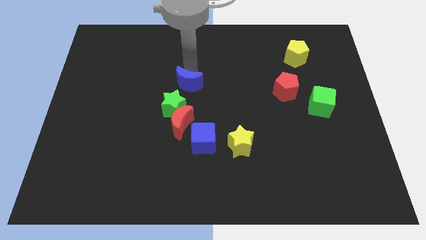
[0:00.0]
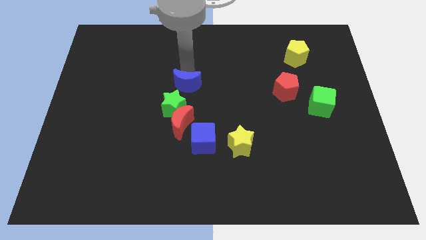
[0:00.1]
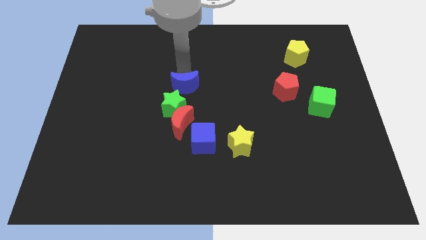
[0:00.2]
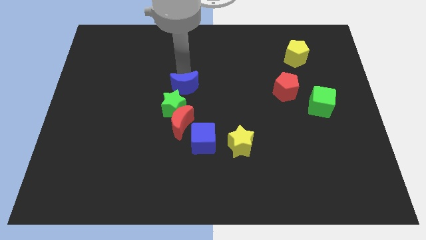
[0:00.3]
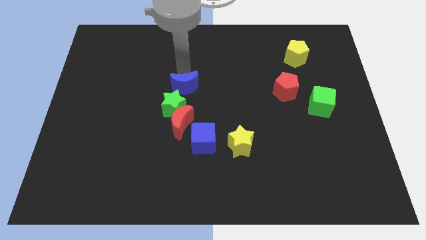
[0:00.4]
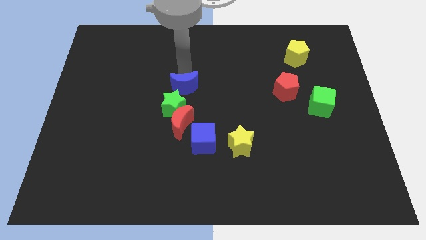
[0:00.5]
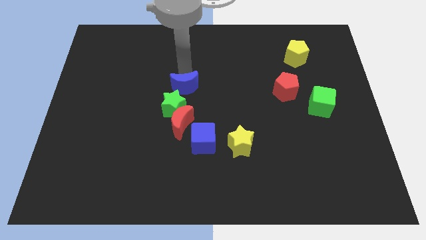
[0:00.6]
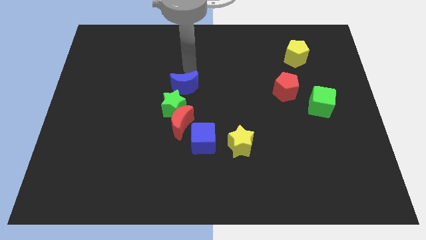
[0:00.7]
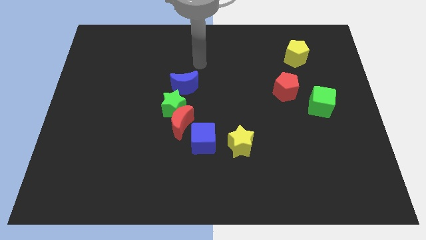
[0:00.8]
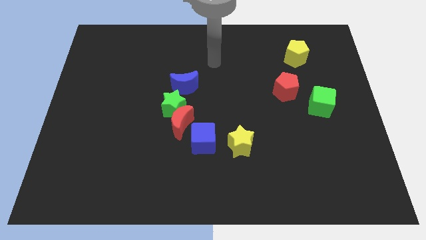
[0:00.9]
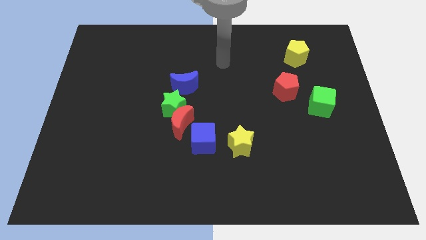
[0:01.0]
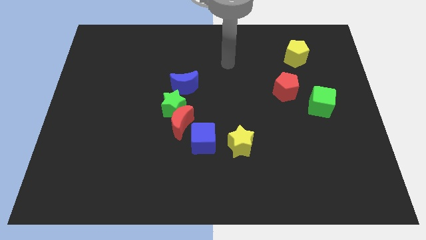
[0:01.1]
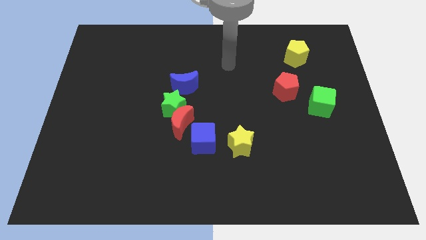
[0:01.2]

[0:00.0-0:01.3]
push blue crescent to the top of green star

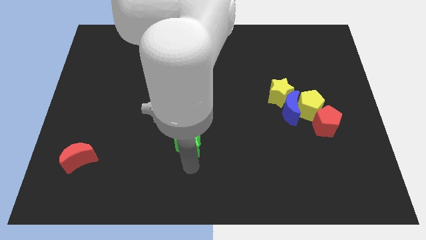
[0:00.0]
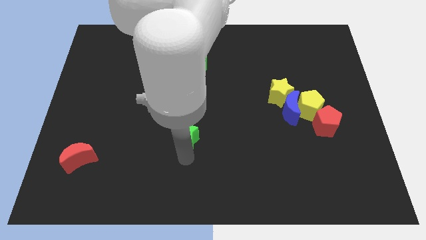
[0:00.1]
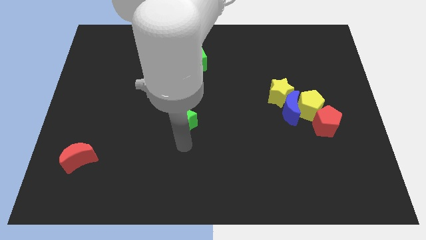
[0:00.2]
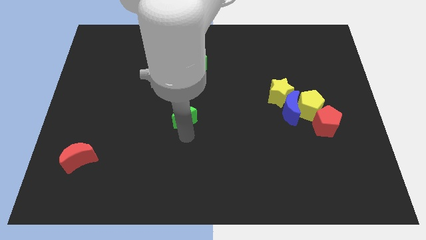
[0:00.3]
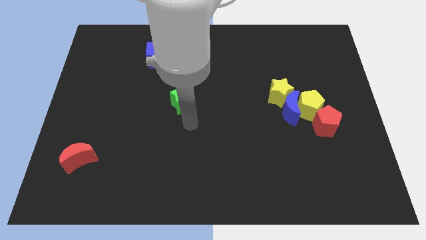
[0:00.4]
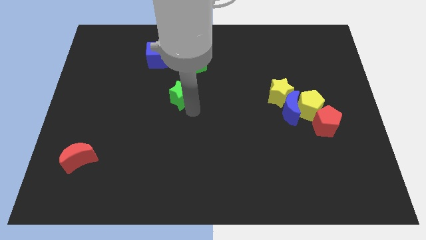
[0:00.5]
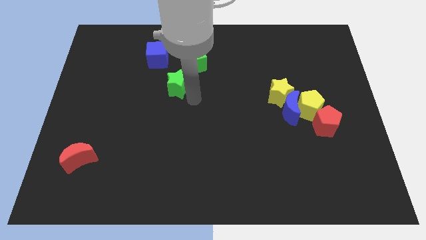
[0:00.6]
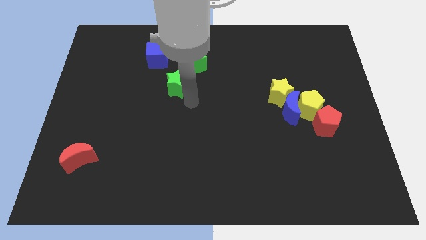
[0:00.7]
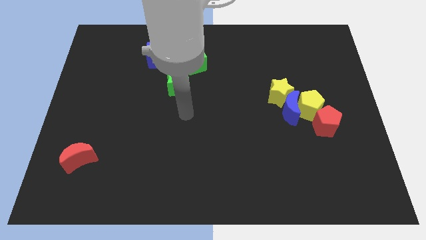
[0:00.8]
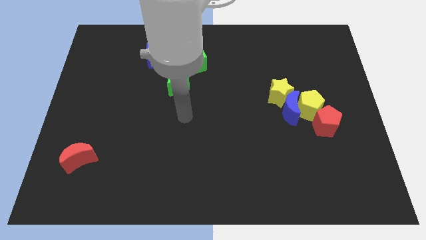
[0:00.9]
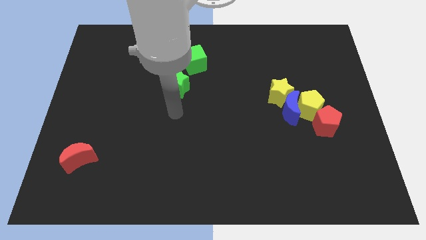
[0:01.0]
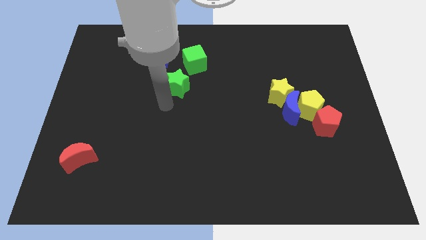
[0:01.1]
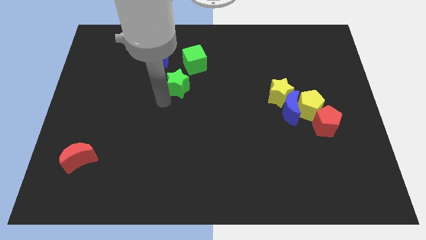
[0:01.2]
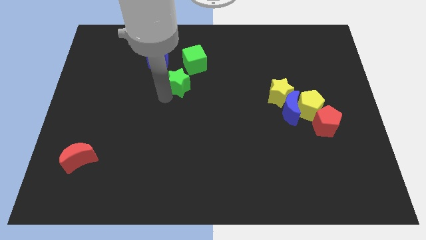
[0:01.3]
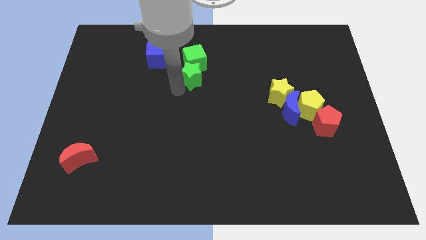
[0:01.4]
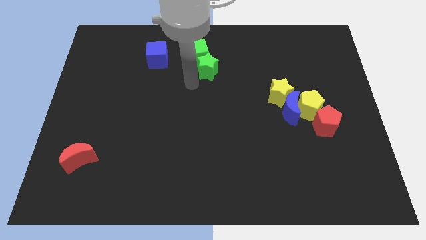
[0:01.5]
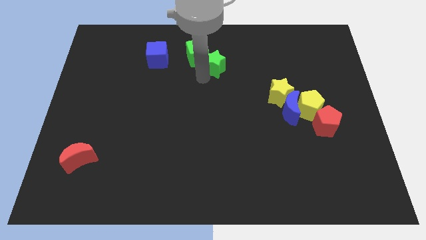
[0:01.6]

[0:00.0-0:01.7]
push the green star into green cube

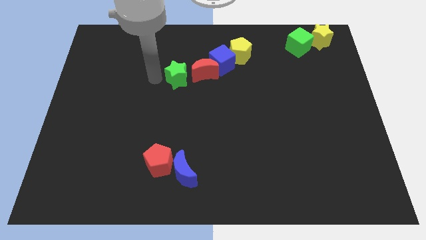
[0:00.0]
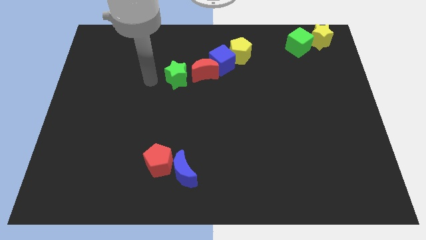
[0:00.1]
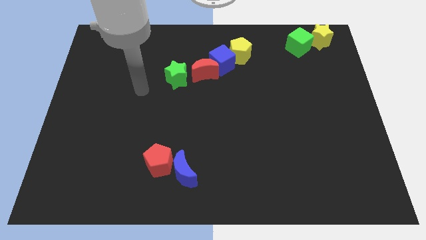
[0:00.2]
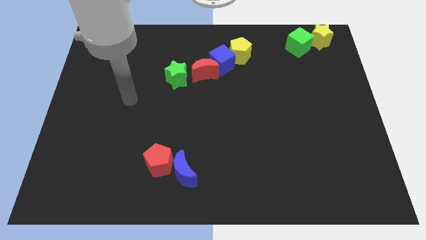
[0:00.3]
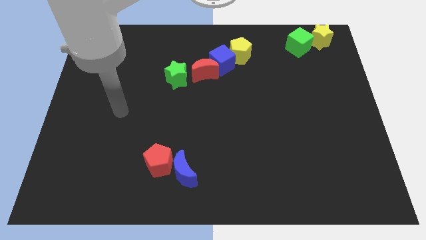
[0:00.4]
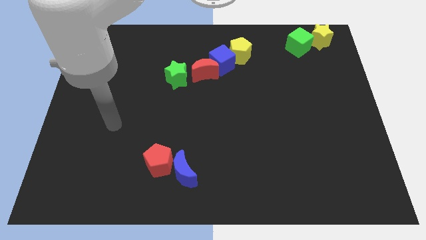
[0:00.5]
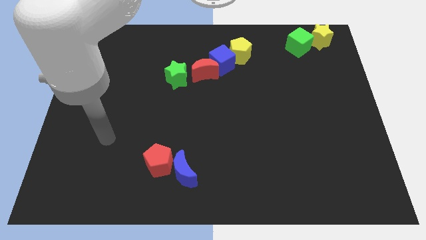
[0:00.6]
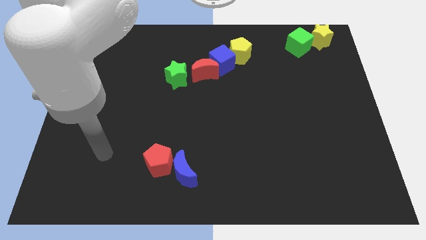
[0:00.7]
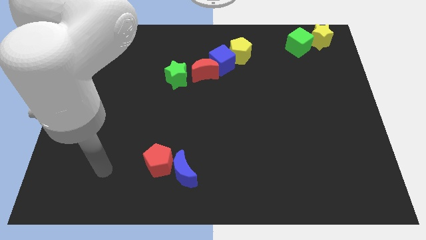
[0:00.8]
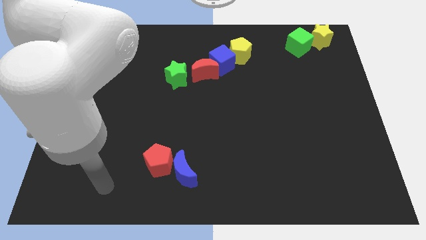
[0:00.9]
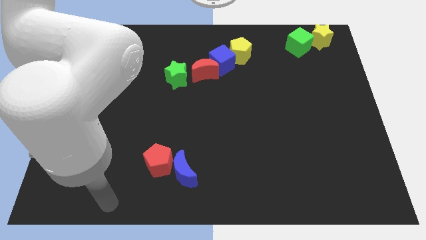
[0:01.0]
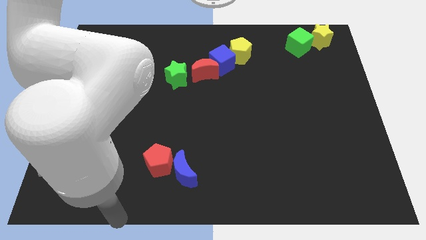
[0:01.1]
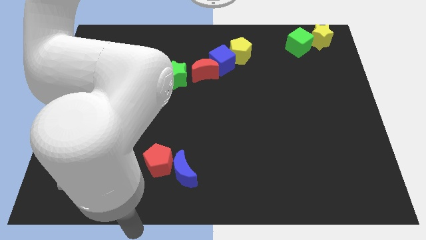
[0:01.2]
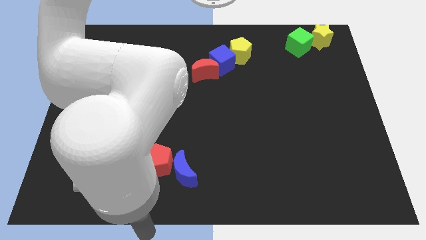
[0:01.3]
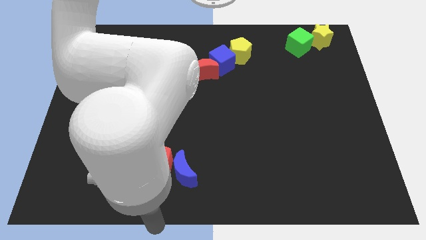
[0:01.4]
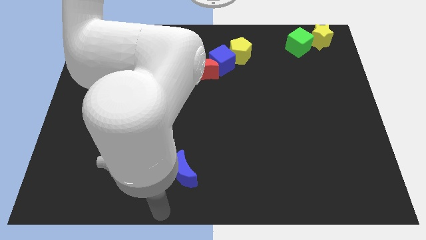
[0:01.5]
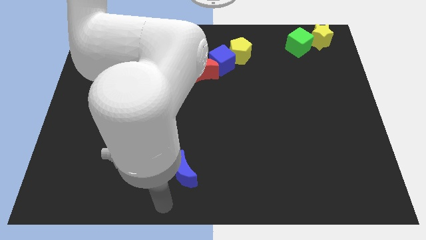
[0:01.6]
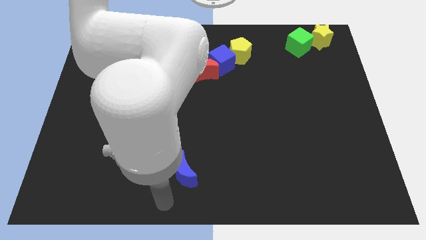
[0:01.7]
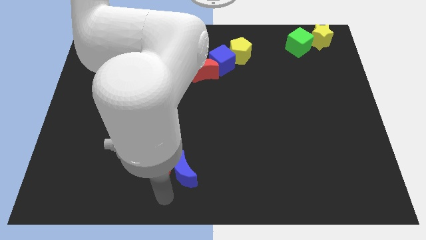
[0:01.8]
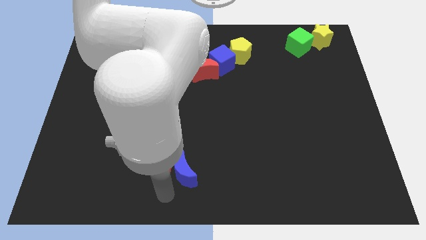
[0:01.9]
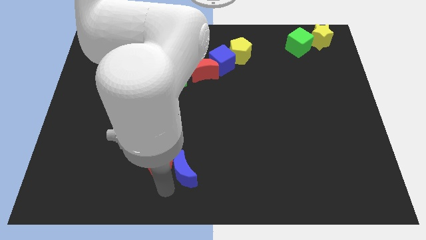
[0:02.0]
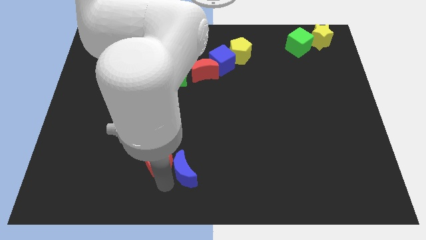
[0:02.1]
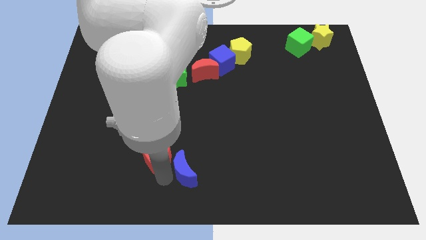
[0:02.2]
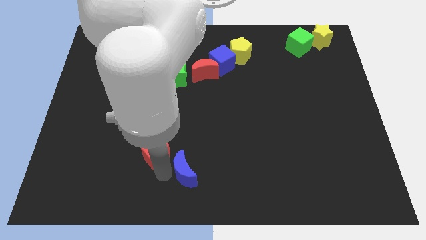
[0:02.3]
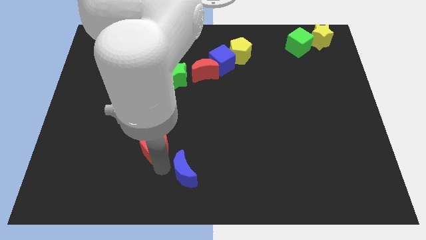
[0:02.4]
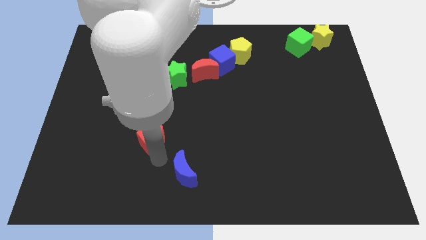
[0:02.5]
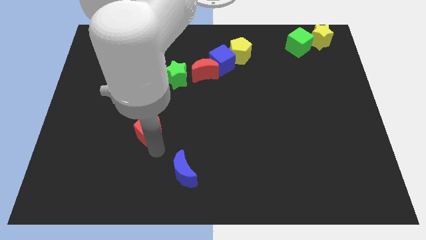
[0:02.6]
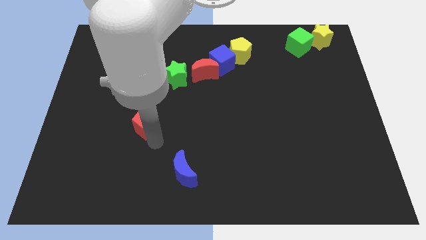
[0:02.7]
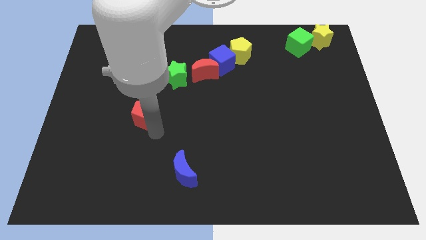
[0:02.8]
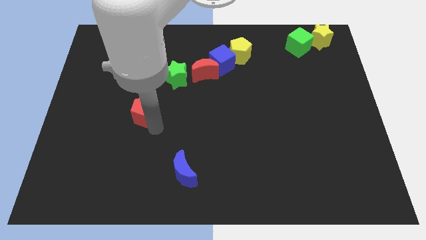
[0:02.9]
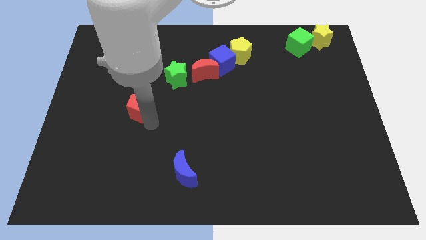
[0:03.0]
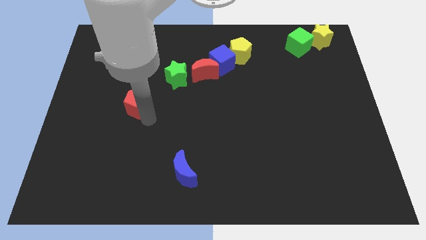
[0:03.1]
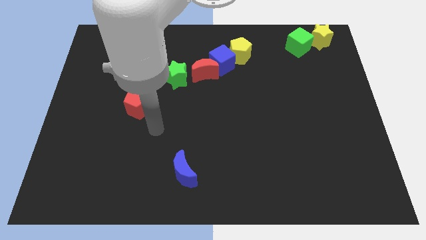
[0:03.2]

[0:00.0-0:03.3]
move the red pentagon to the bottom left of the green star

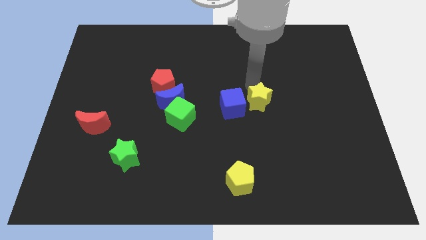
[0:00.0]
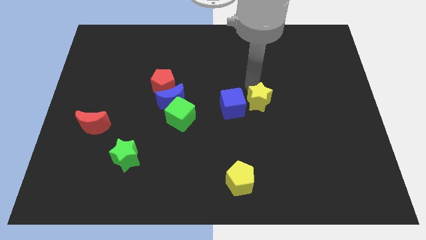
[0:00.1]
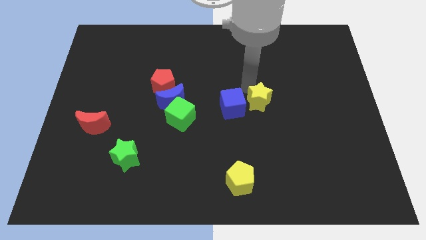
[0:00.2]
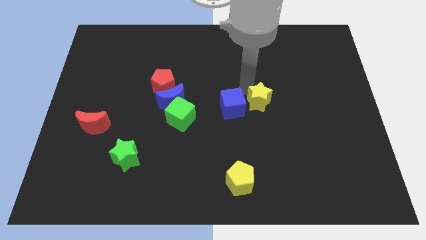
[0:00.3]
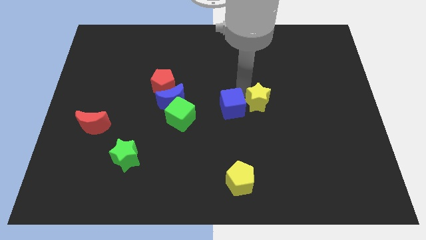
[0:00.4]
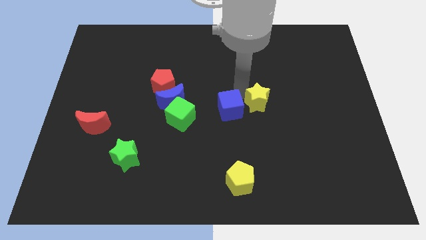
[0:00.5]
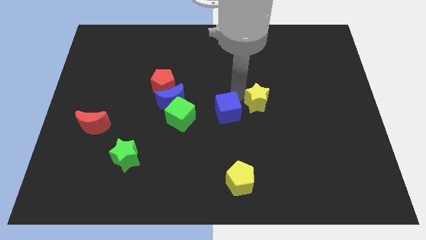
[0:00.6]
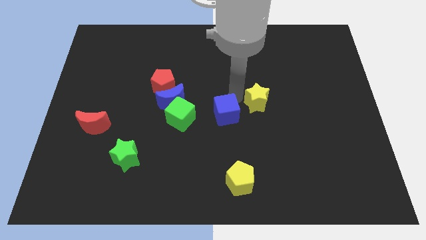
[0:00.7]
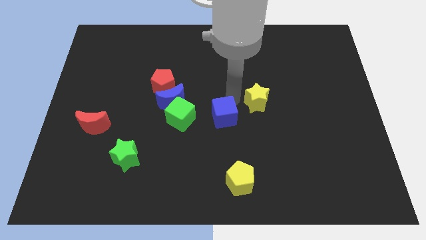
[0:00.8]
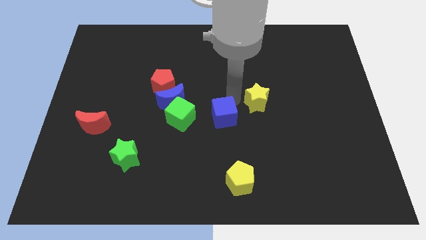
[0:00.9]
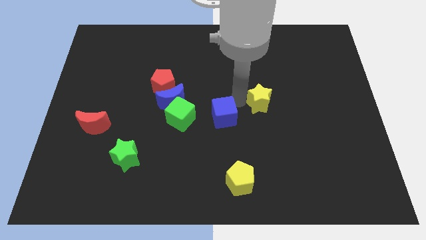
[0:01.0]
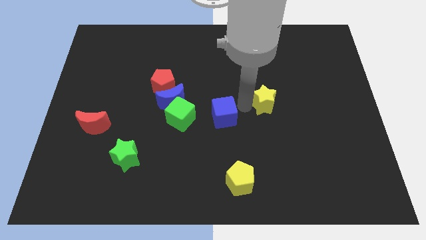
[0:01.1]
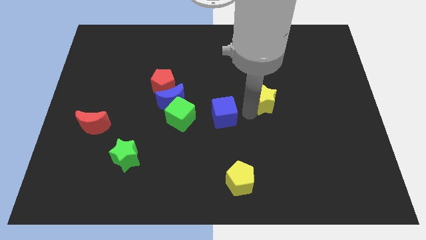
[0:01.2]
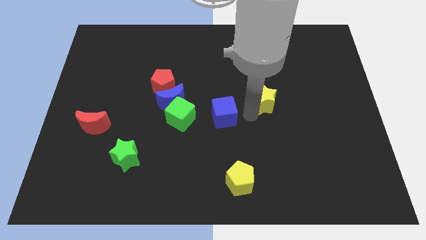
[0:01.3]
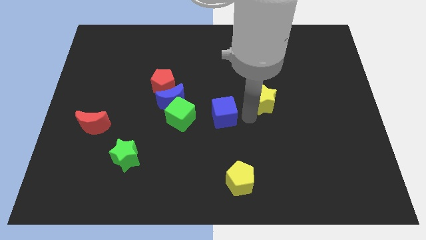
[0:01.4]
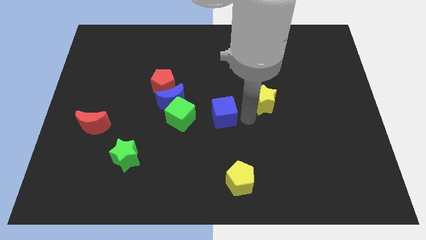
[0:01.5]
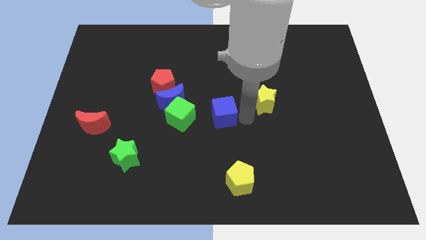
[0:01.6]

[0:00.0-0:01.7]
separate the yellow star and blue cube

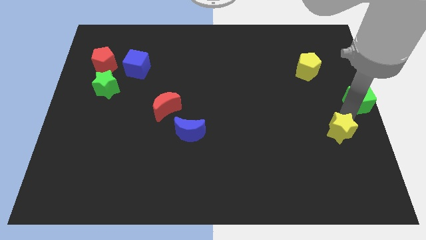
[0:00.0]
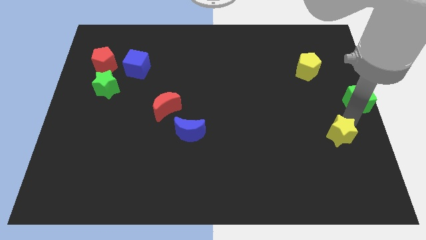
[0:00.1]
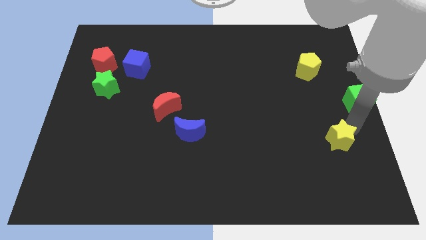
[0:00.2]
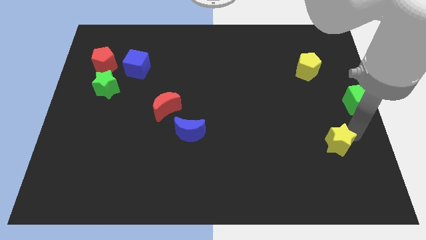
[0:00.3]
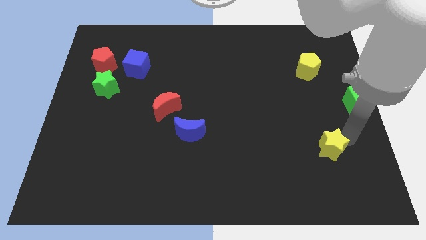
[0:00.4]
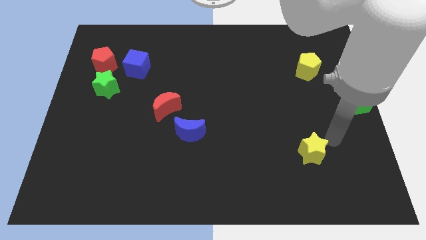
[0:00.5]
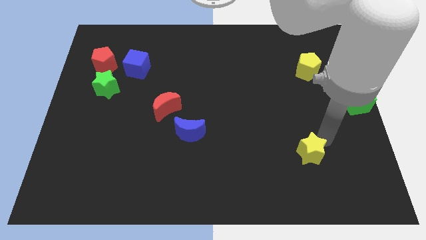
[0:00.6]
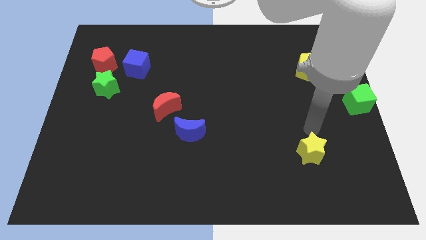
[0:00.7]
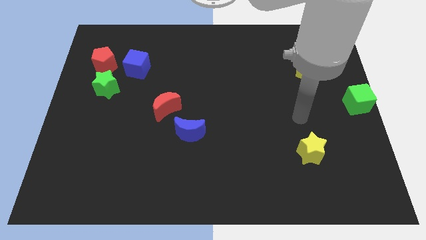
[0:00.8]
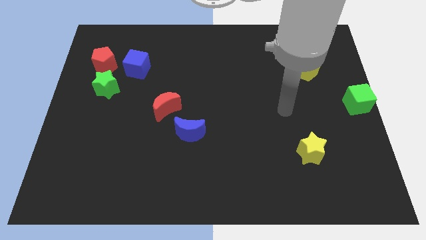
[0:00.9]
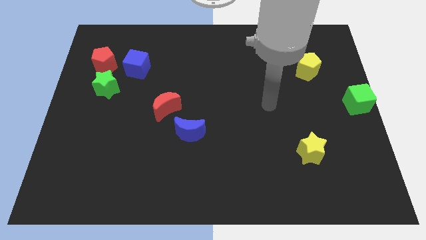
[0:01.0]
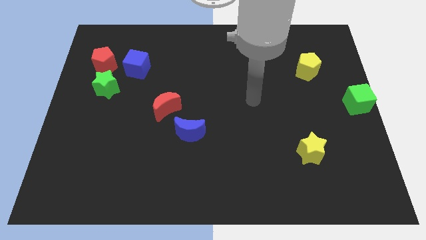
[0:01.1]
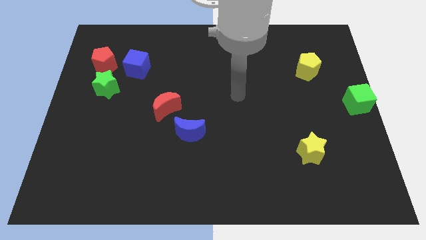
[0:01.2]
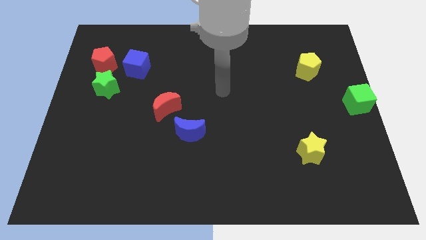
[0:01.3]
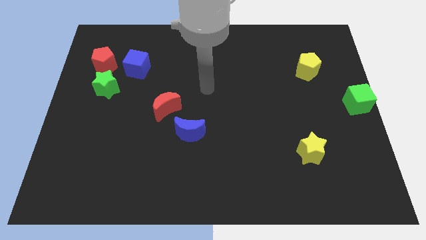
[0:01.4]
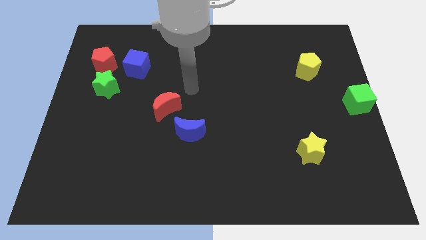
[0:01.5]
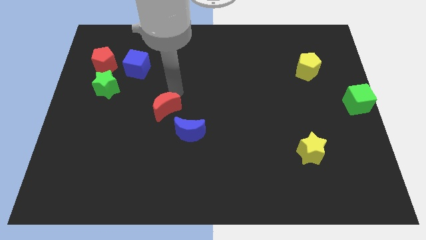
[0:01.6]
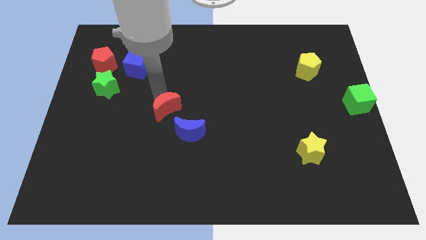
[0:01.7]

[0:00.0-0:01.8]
push the yellow star to the bottom of the board
